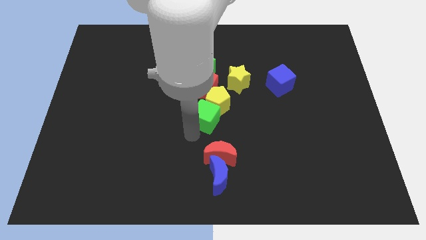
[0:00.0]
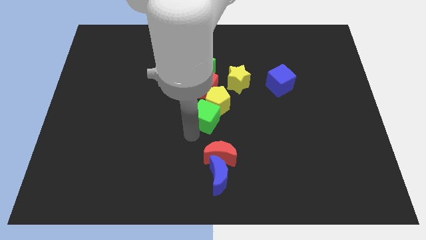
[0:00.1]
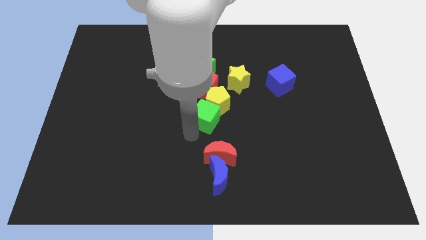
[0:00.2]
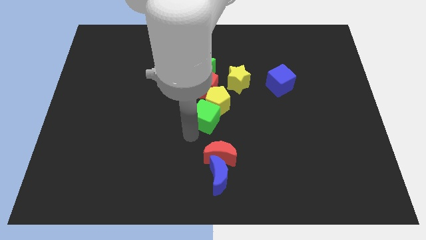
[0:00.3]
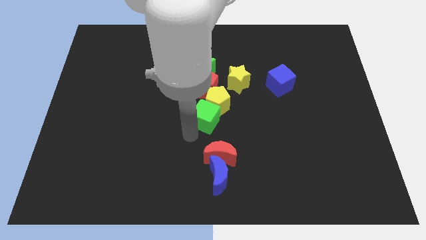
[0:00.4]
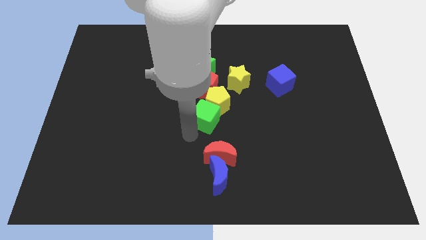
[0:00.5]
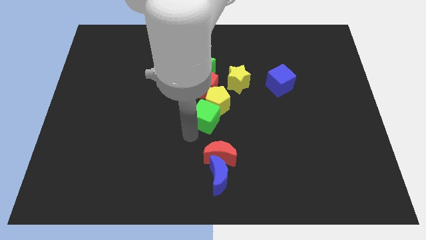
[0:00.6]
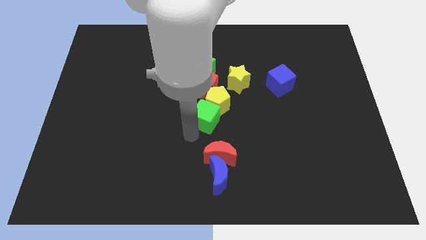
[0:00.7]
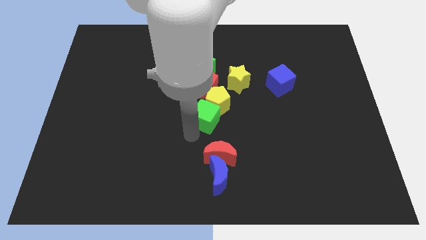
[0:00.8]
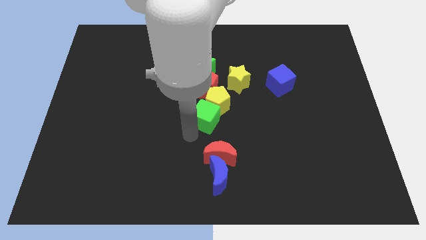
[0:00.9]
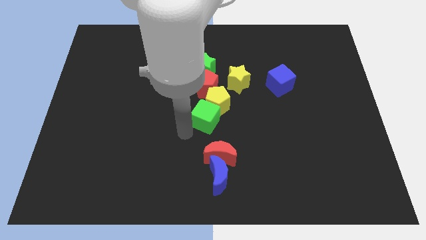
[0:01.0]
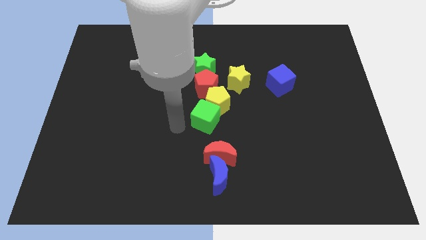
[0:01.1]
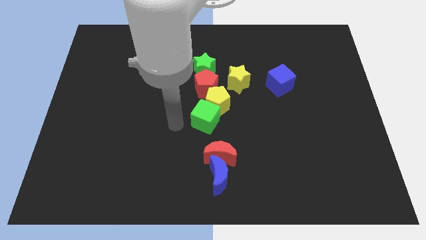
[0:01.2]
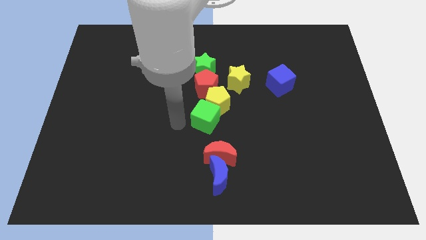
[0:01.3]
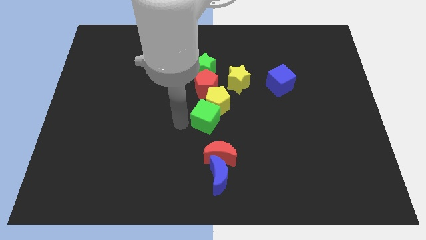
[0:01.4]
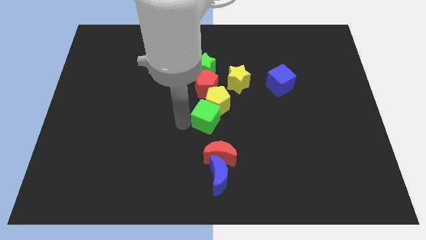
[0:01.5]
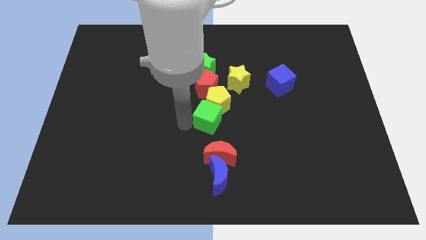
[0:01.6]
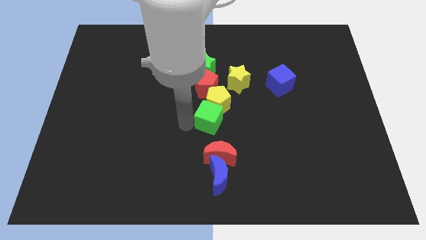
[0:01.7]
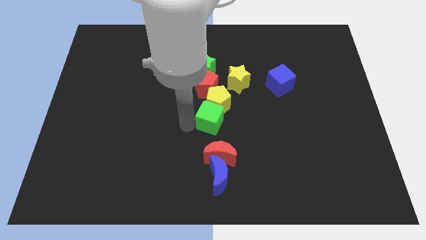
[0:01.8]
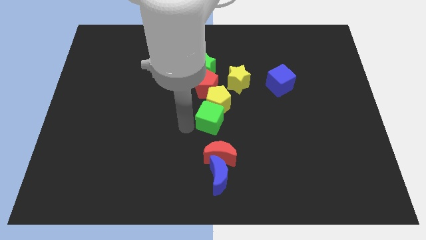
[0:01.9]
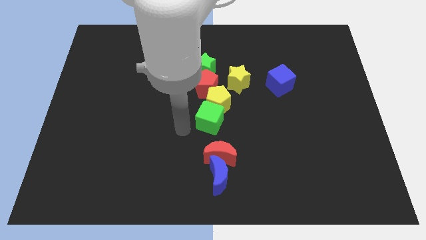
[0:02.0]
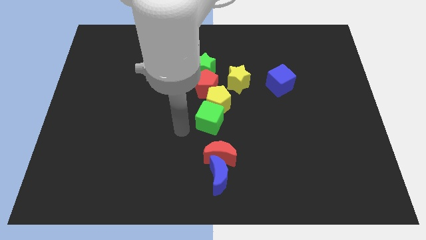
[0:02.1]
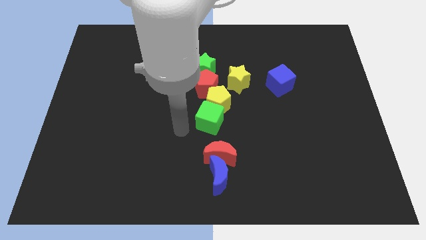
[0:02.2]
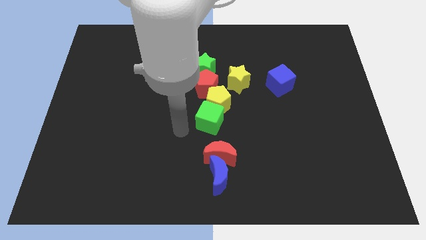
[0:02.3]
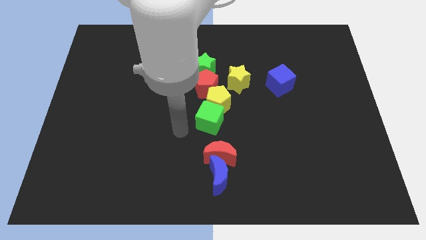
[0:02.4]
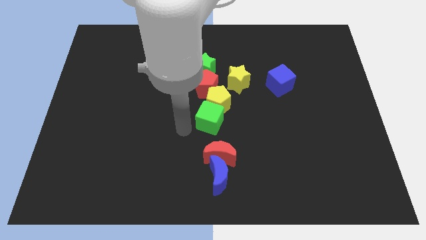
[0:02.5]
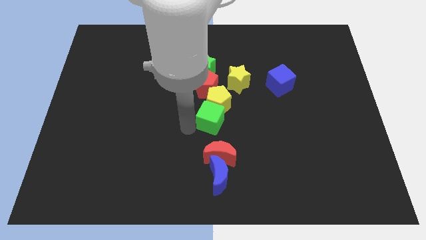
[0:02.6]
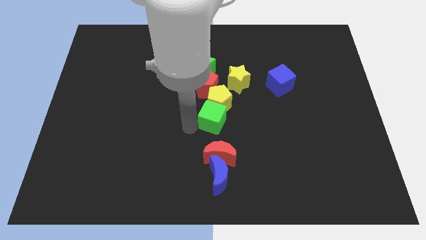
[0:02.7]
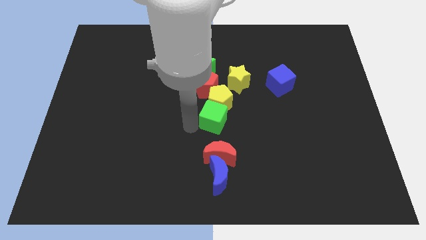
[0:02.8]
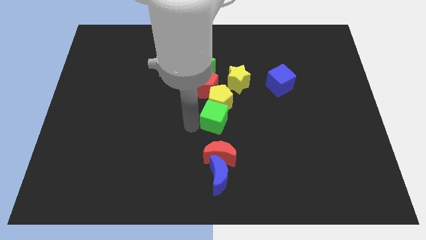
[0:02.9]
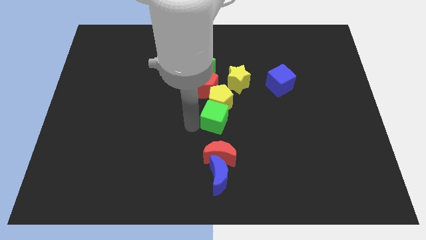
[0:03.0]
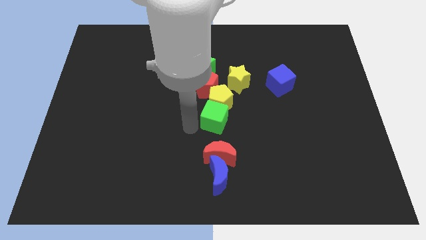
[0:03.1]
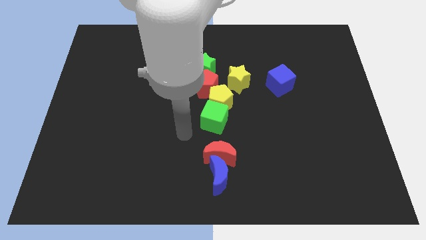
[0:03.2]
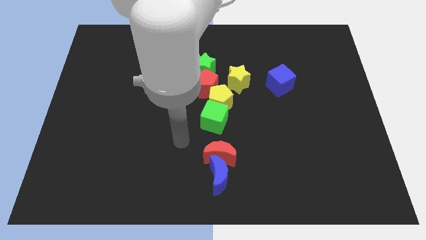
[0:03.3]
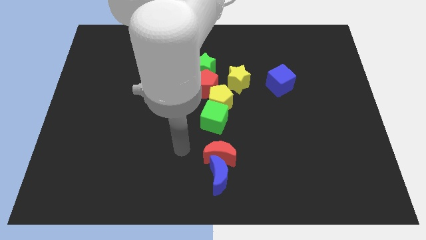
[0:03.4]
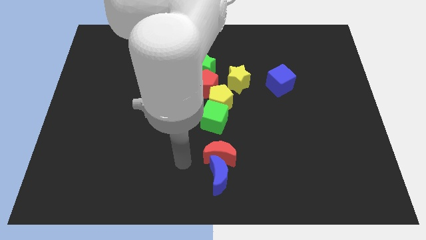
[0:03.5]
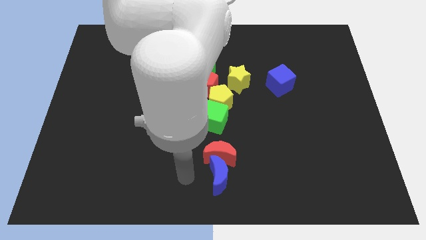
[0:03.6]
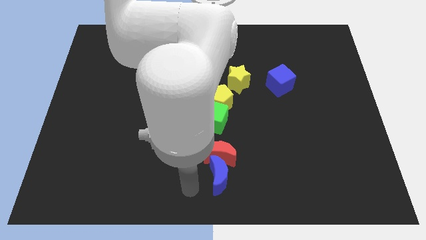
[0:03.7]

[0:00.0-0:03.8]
adjust the green cube and yellow pentagon

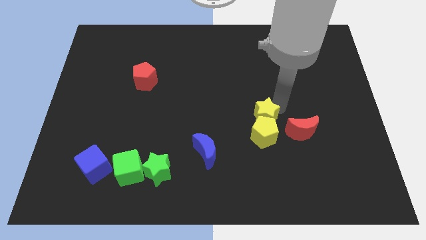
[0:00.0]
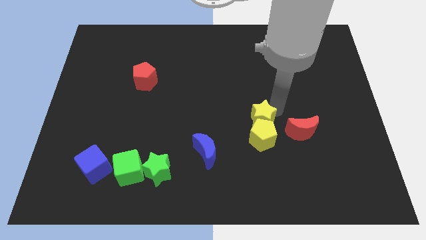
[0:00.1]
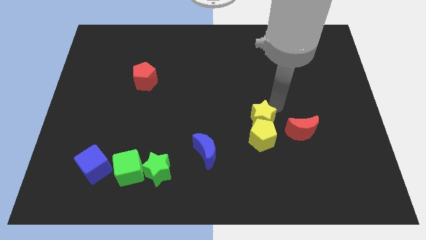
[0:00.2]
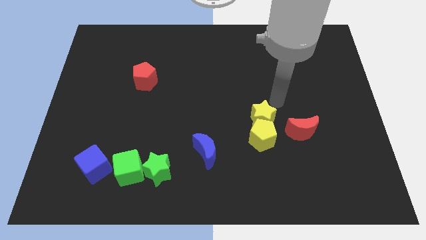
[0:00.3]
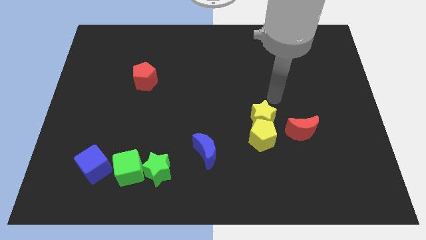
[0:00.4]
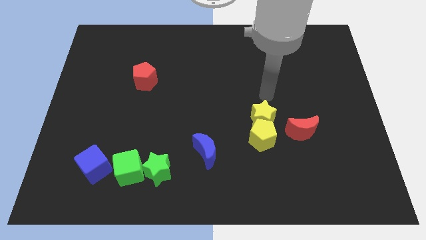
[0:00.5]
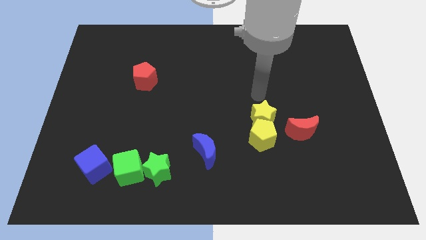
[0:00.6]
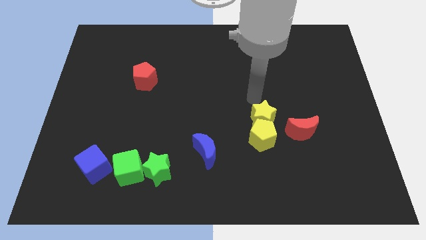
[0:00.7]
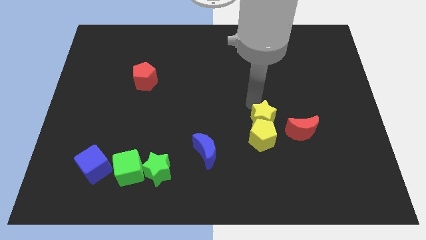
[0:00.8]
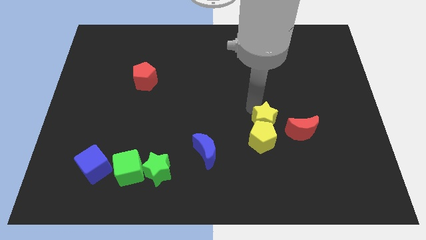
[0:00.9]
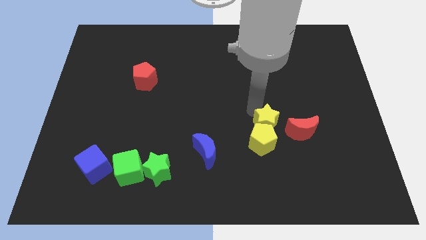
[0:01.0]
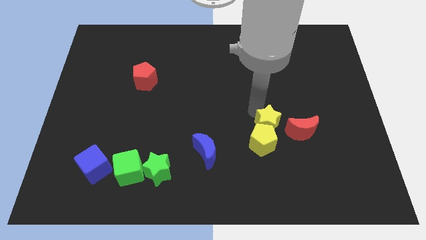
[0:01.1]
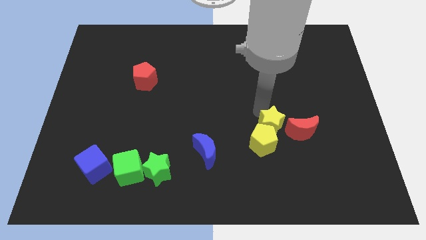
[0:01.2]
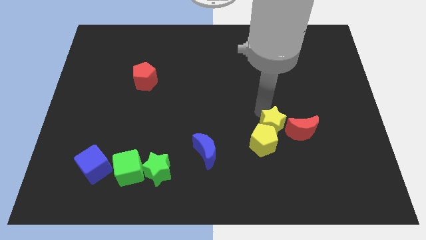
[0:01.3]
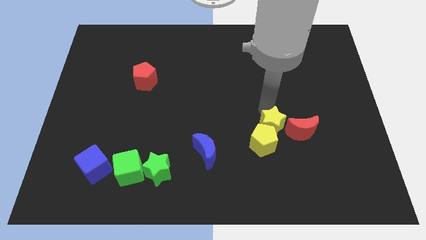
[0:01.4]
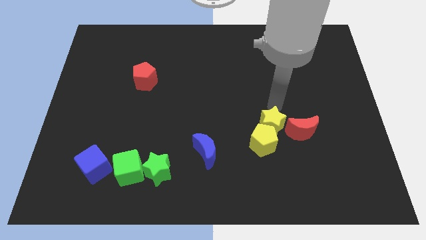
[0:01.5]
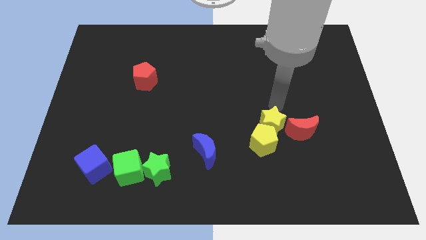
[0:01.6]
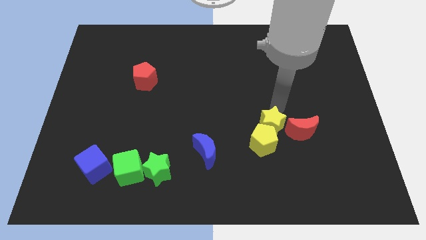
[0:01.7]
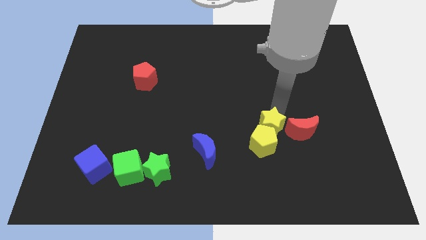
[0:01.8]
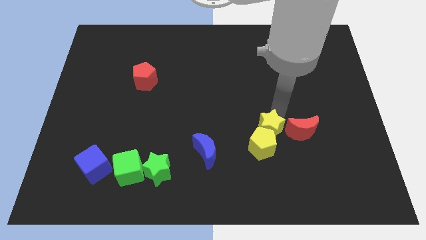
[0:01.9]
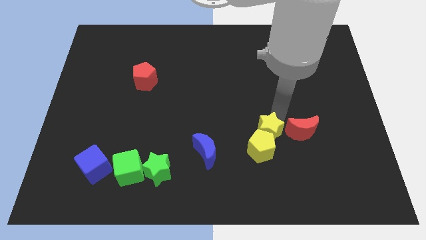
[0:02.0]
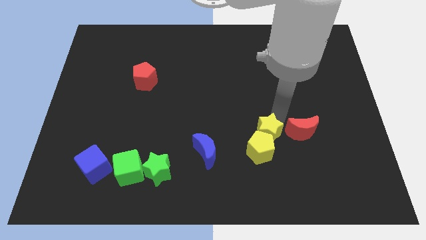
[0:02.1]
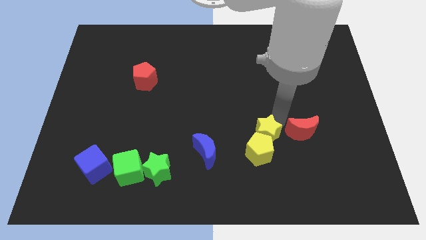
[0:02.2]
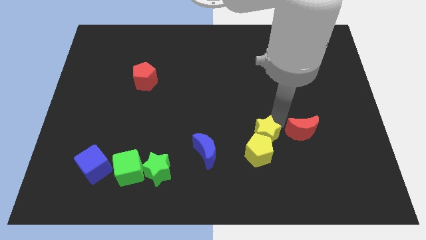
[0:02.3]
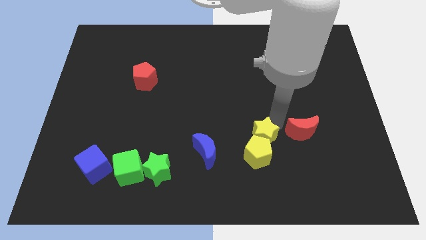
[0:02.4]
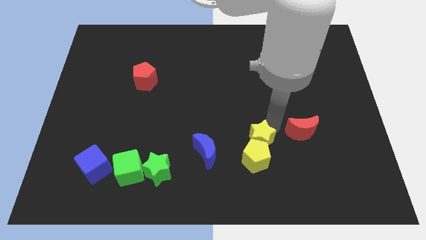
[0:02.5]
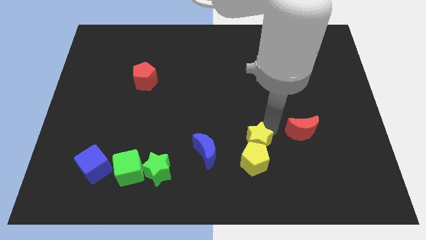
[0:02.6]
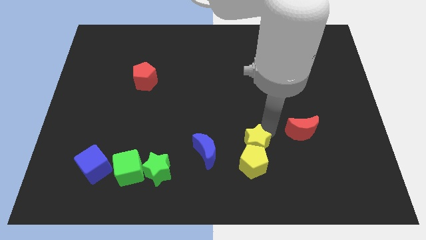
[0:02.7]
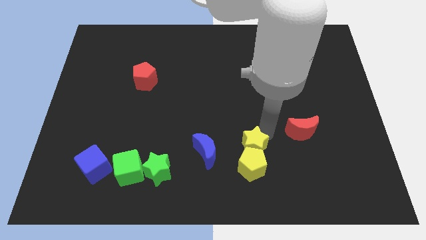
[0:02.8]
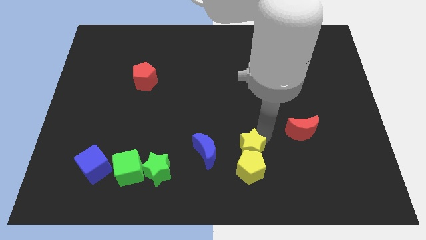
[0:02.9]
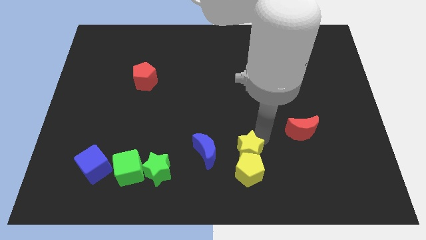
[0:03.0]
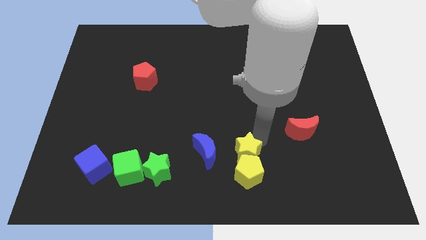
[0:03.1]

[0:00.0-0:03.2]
drag the yellow star and yellow pentagon towards bottom center

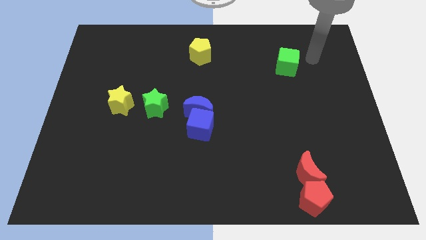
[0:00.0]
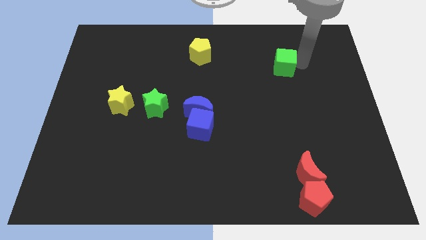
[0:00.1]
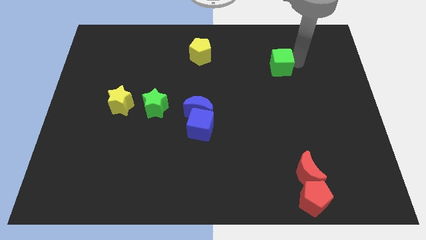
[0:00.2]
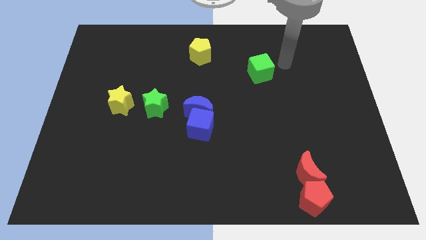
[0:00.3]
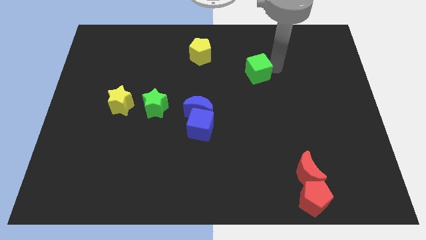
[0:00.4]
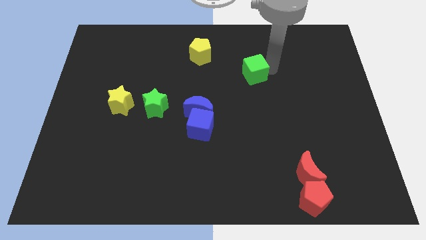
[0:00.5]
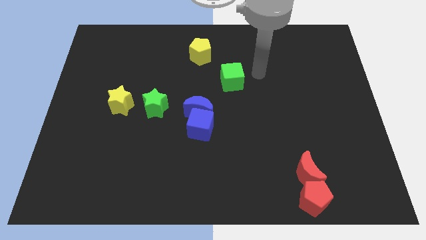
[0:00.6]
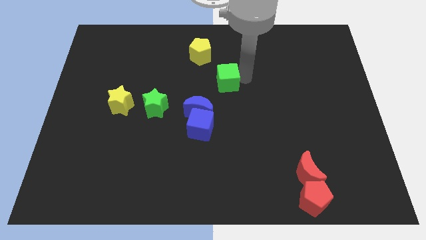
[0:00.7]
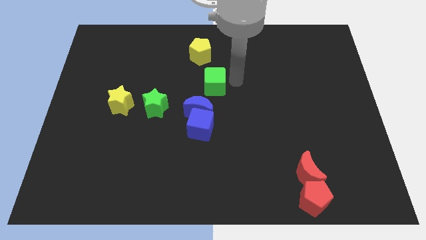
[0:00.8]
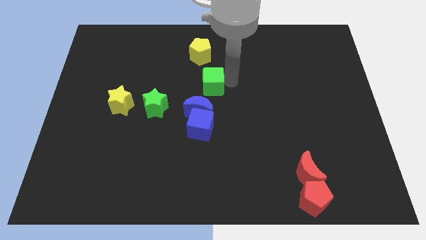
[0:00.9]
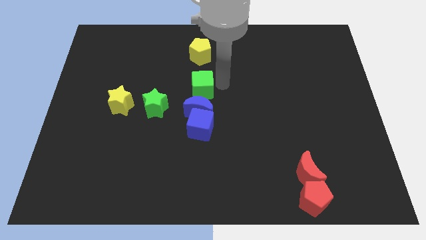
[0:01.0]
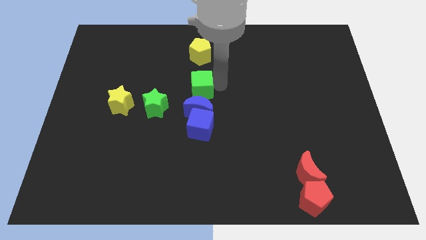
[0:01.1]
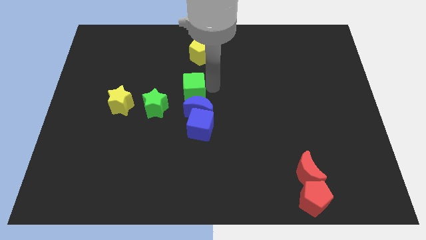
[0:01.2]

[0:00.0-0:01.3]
move the green cube towards the top side of the blue moon

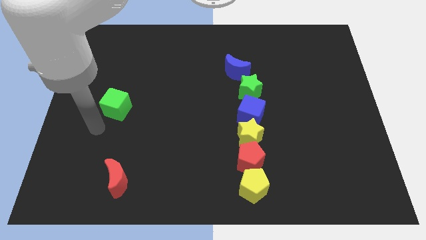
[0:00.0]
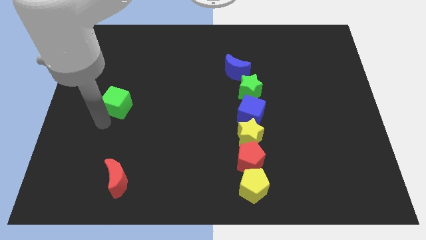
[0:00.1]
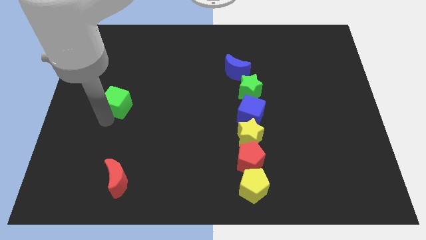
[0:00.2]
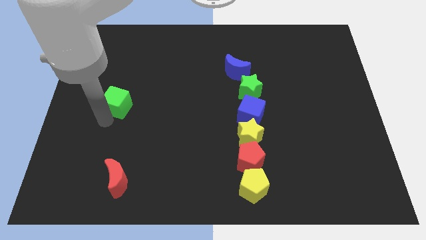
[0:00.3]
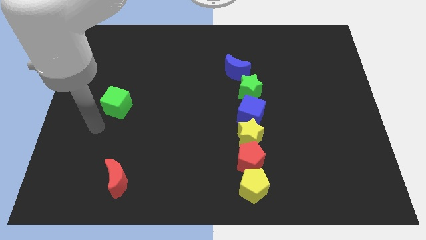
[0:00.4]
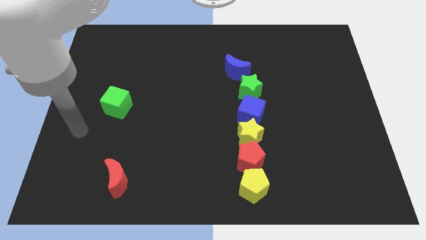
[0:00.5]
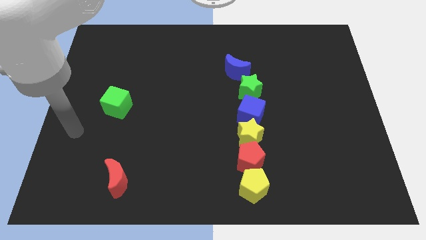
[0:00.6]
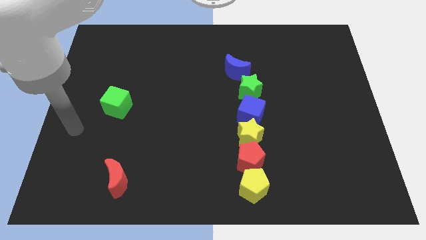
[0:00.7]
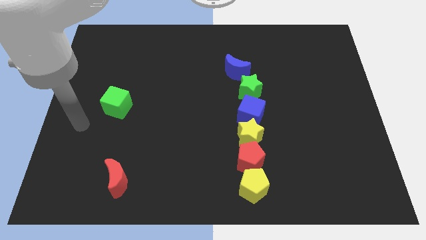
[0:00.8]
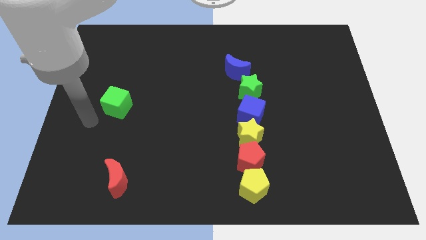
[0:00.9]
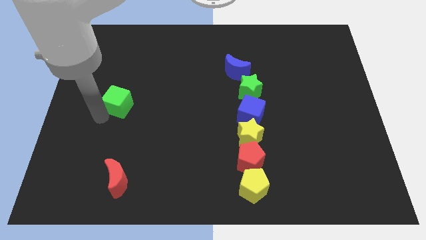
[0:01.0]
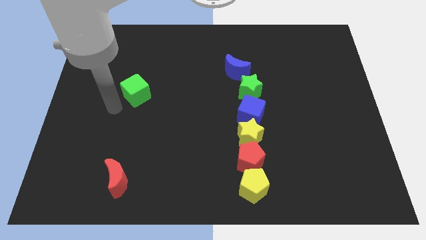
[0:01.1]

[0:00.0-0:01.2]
drag the green cube horizontally at the left side of the green star
